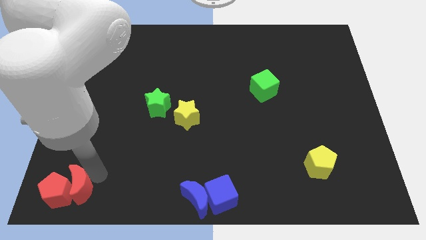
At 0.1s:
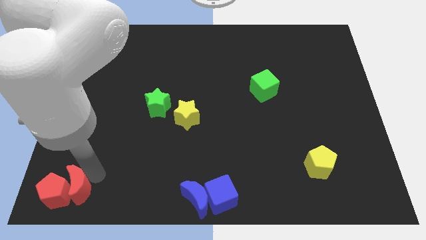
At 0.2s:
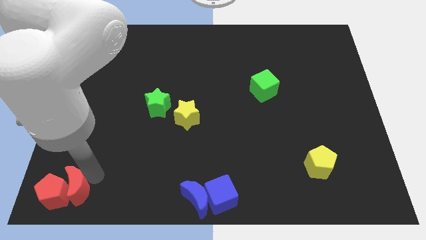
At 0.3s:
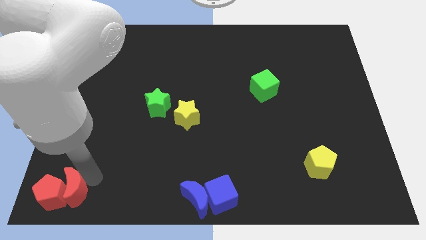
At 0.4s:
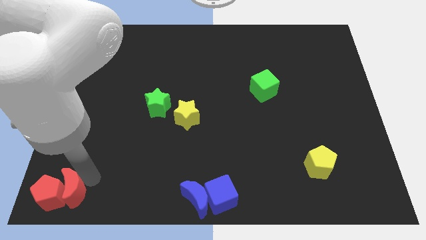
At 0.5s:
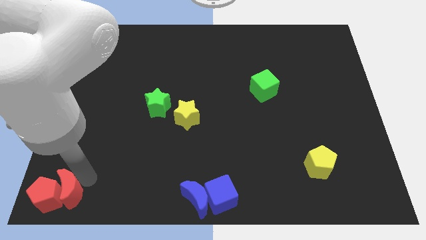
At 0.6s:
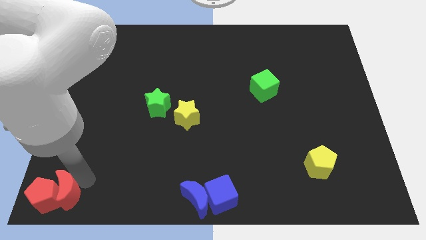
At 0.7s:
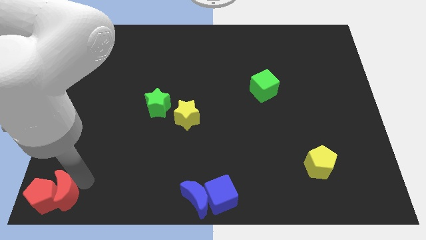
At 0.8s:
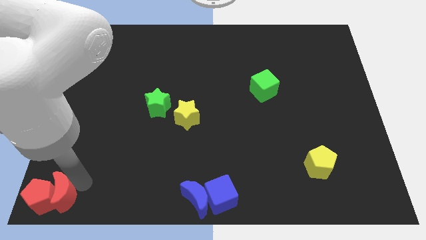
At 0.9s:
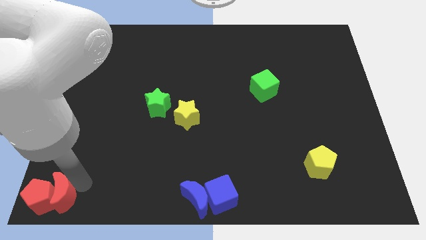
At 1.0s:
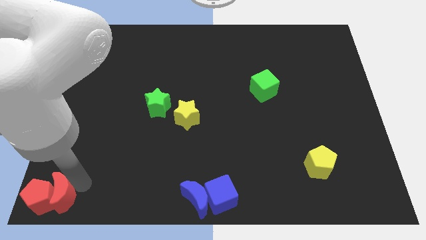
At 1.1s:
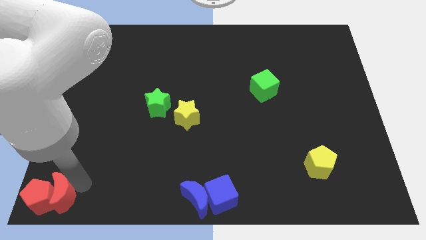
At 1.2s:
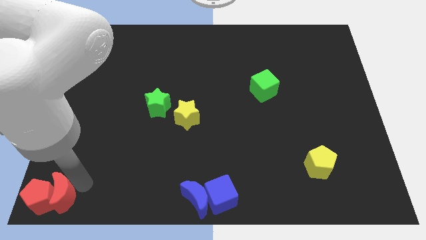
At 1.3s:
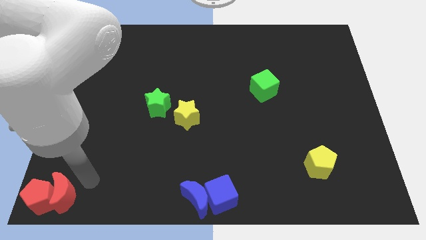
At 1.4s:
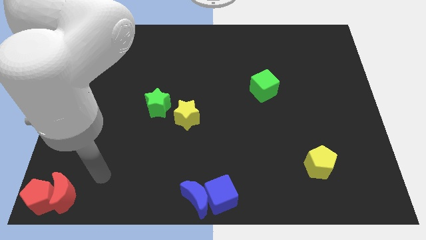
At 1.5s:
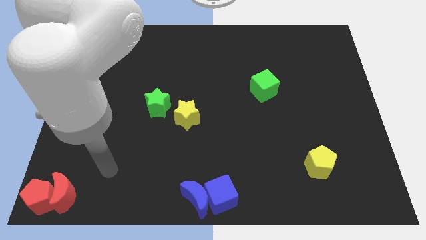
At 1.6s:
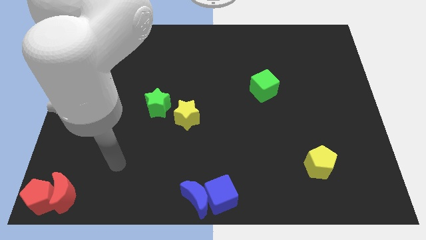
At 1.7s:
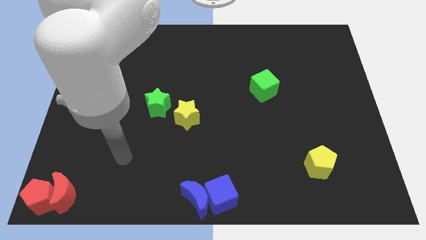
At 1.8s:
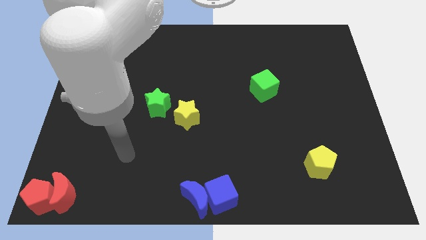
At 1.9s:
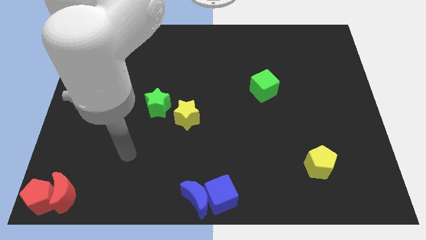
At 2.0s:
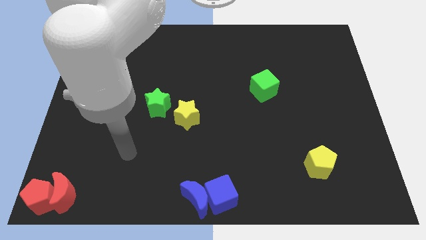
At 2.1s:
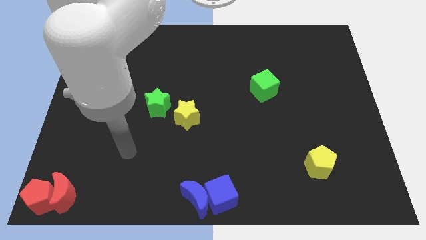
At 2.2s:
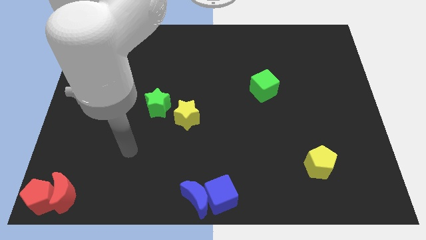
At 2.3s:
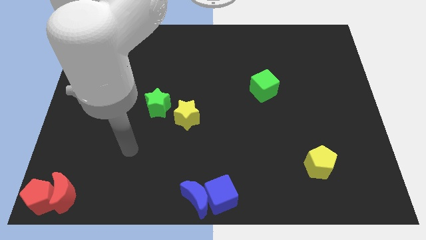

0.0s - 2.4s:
push red crescent and red pentagon to the bottom left of the board

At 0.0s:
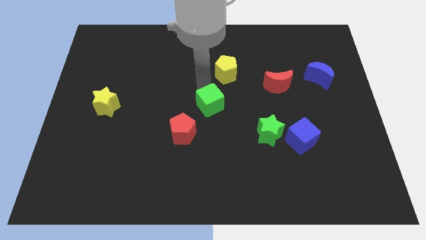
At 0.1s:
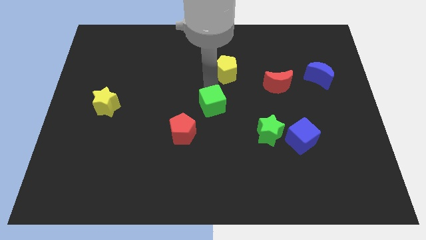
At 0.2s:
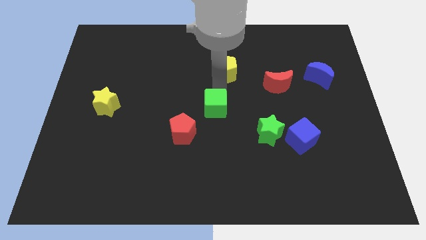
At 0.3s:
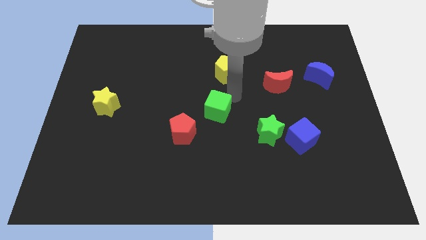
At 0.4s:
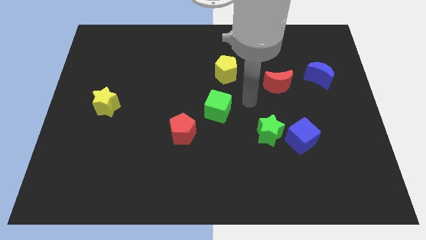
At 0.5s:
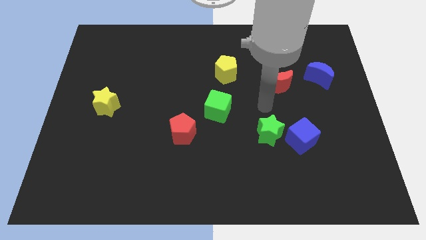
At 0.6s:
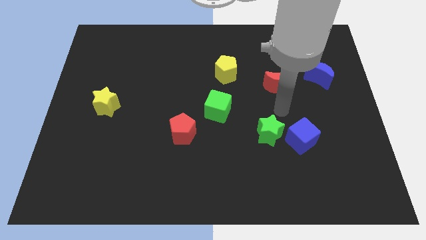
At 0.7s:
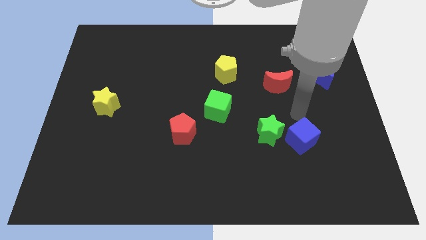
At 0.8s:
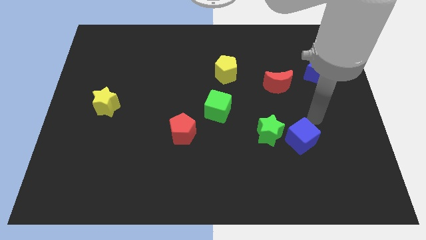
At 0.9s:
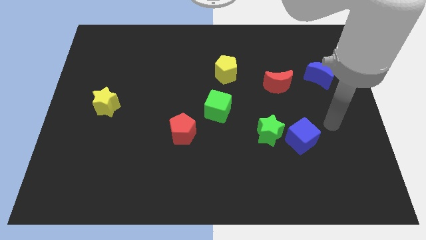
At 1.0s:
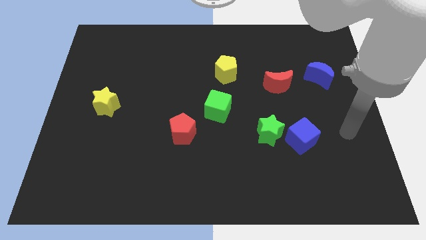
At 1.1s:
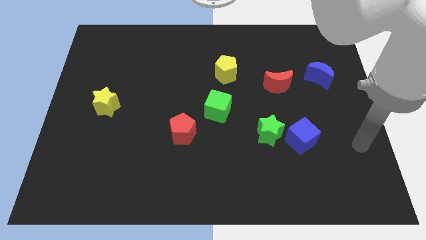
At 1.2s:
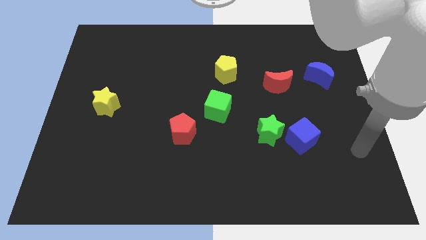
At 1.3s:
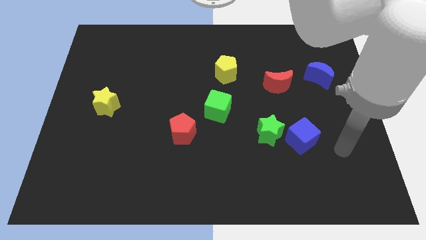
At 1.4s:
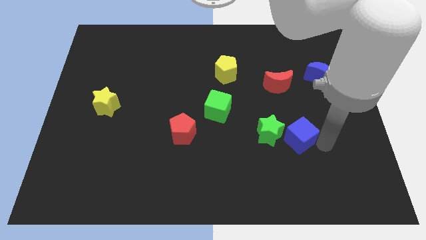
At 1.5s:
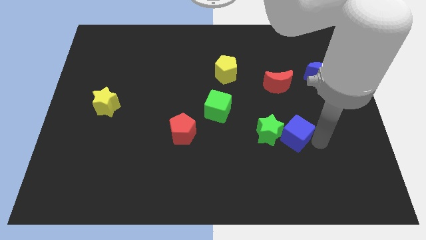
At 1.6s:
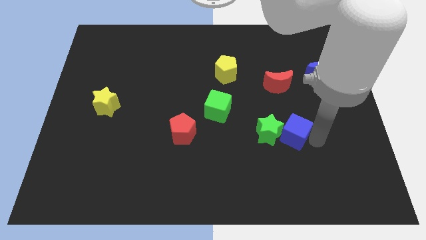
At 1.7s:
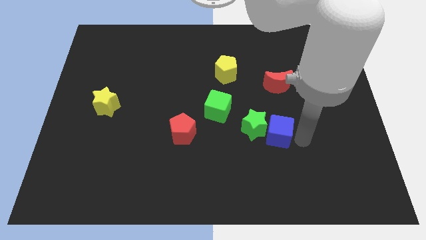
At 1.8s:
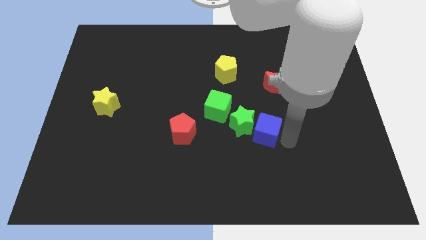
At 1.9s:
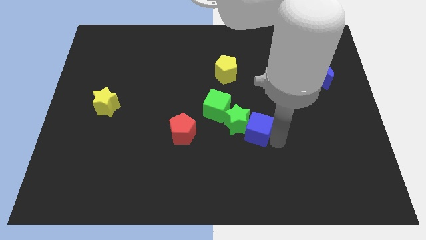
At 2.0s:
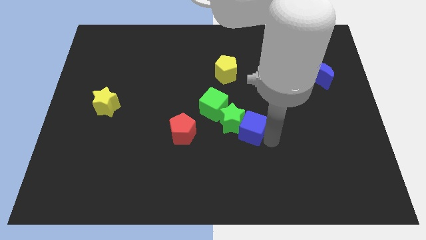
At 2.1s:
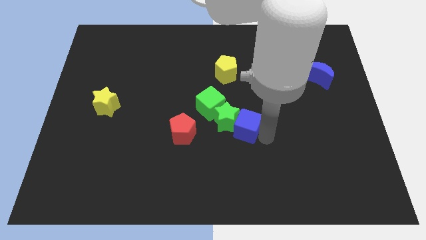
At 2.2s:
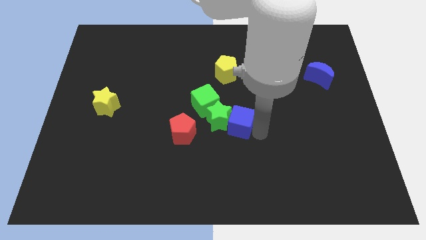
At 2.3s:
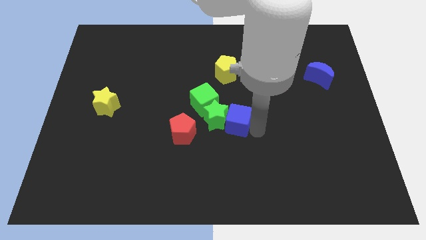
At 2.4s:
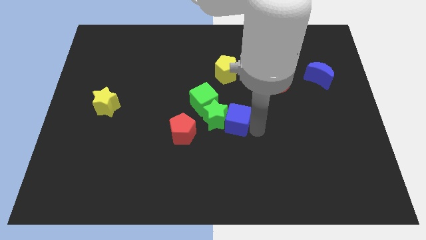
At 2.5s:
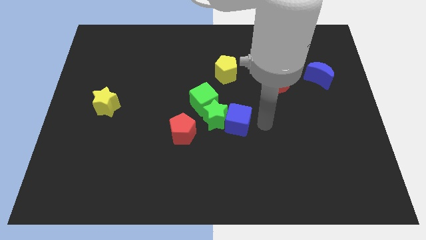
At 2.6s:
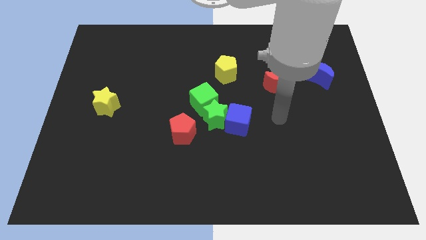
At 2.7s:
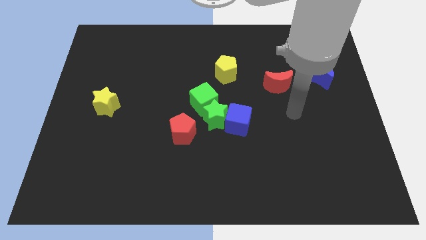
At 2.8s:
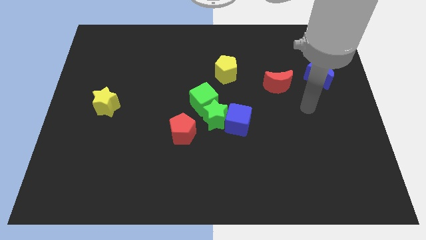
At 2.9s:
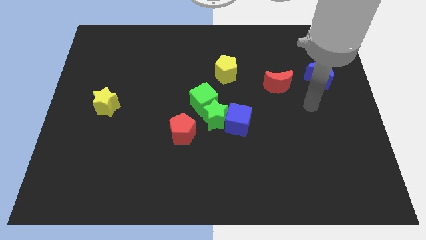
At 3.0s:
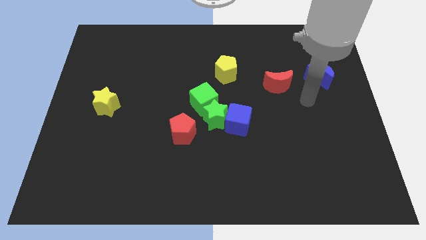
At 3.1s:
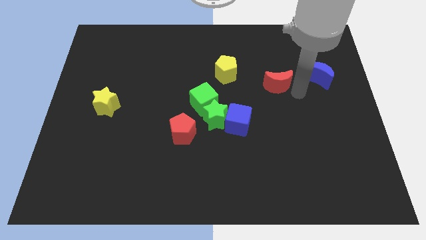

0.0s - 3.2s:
push the blue cube into green star

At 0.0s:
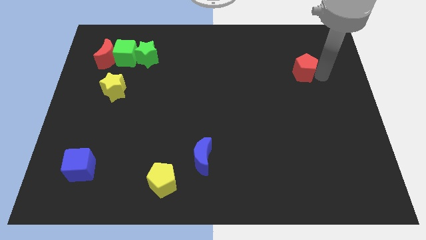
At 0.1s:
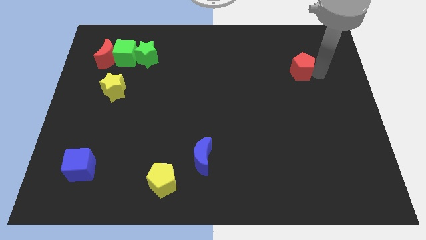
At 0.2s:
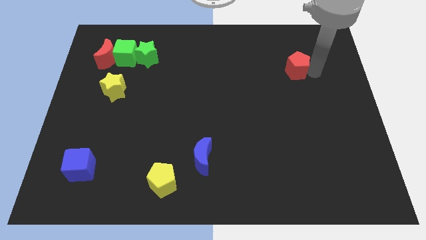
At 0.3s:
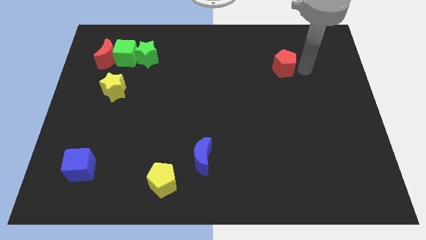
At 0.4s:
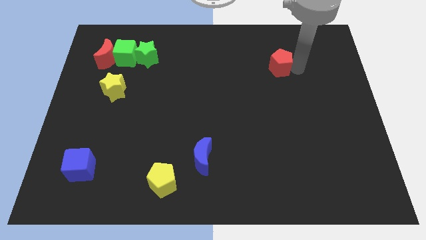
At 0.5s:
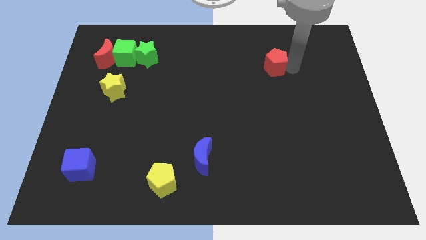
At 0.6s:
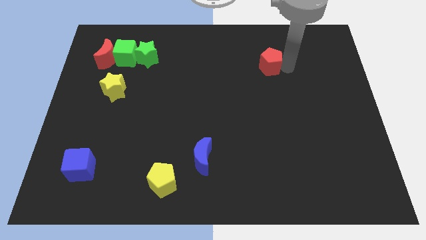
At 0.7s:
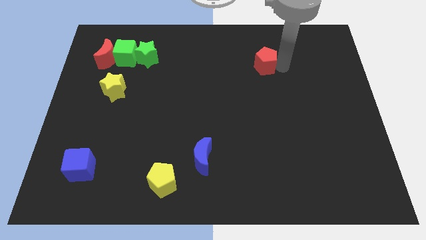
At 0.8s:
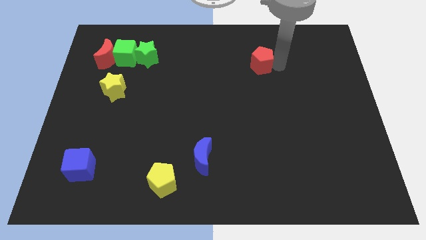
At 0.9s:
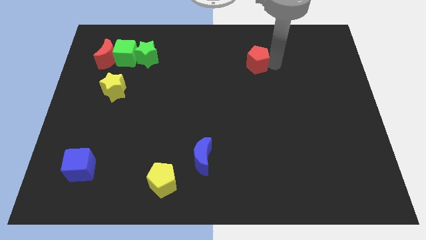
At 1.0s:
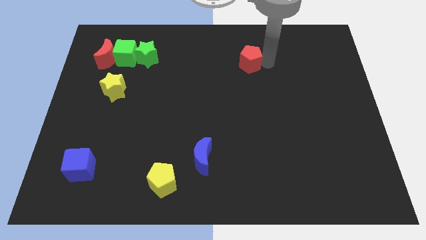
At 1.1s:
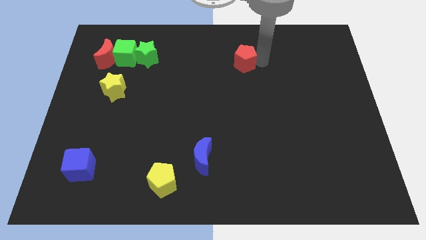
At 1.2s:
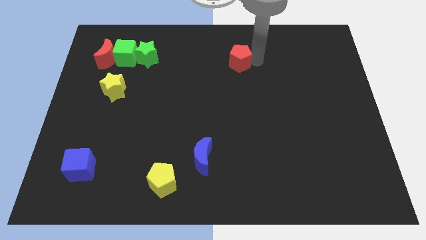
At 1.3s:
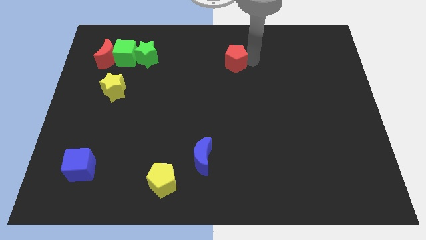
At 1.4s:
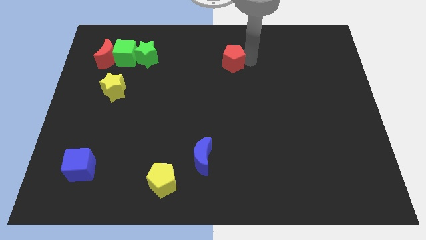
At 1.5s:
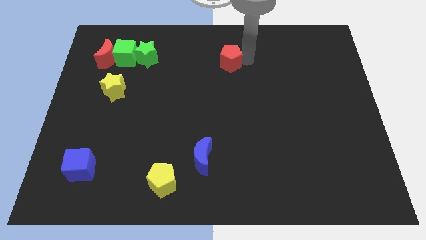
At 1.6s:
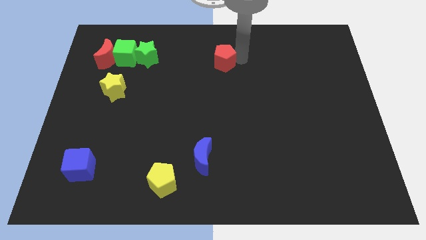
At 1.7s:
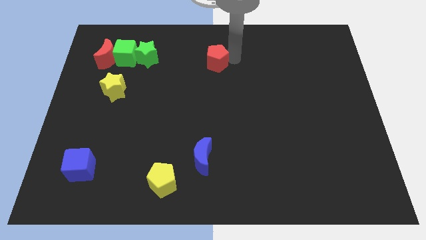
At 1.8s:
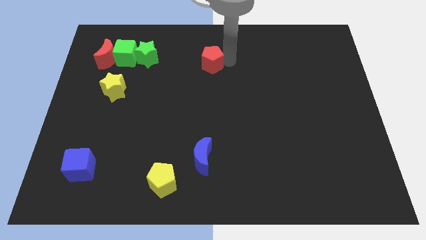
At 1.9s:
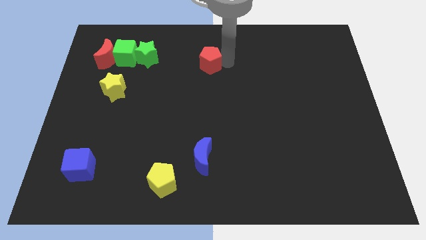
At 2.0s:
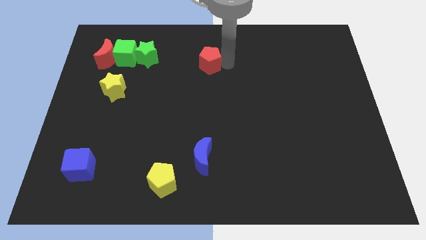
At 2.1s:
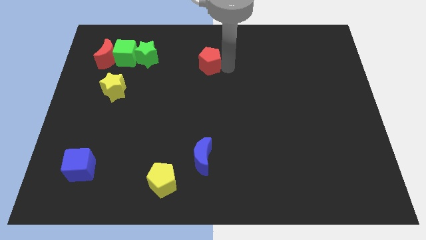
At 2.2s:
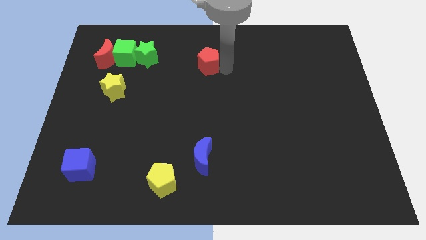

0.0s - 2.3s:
move the red pentagon to the left side of the board

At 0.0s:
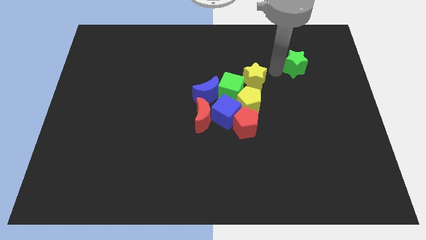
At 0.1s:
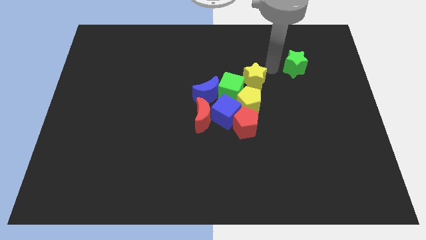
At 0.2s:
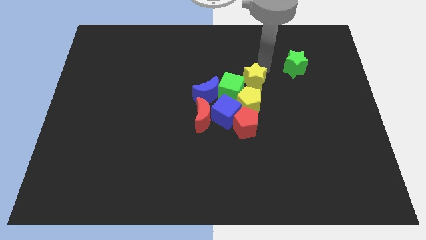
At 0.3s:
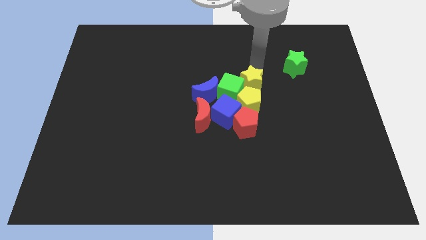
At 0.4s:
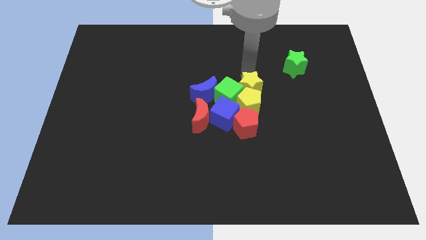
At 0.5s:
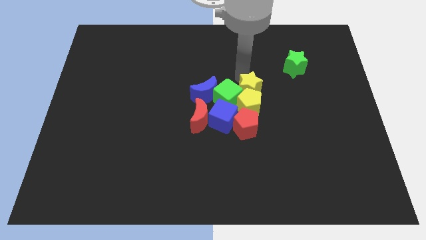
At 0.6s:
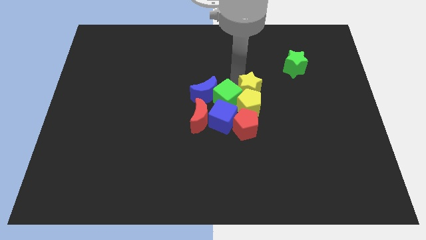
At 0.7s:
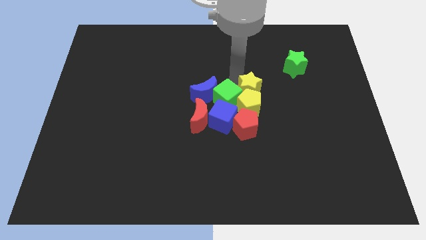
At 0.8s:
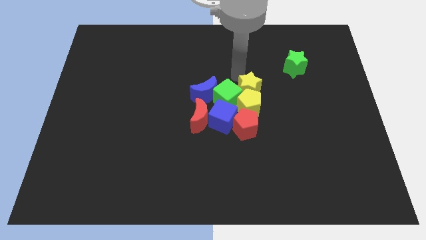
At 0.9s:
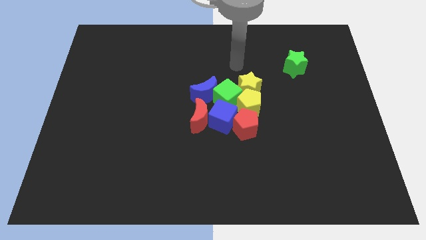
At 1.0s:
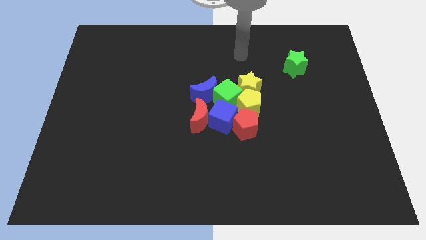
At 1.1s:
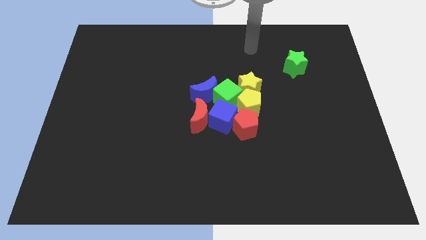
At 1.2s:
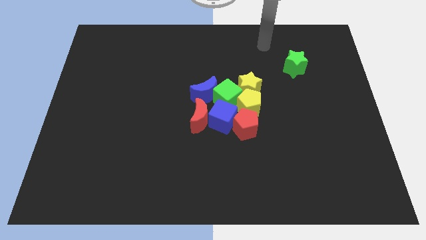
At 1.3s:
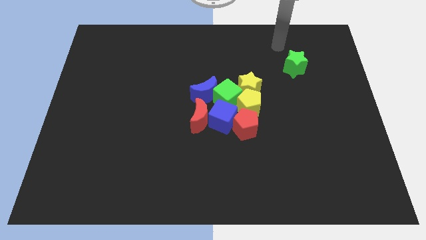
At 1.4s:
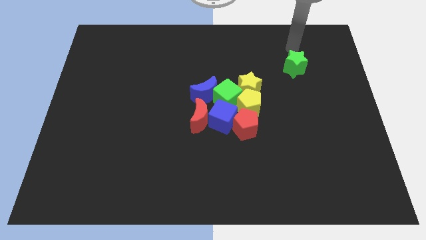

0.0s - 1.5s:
move the yellow star into the yellow pentagon
